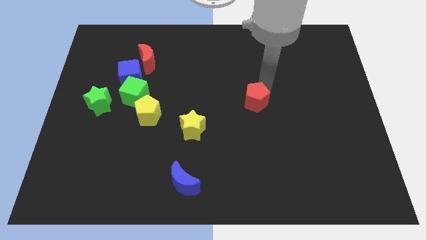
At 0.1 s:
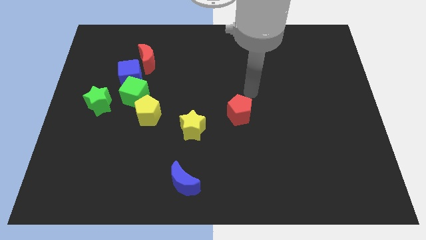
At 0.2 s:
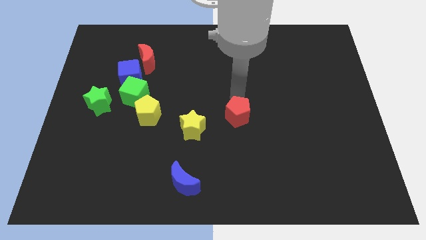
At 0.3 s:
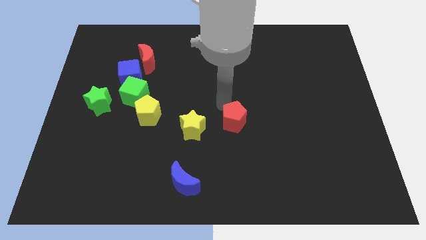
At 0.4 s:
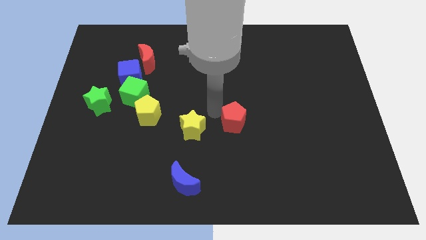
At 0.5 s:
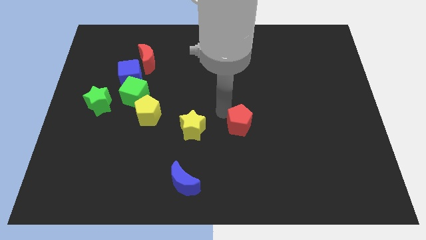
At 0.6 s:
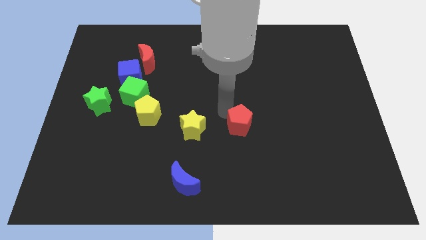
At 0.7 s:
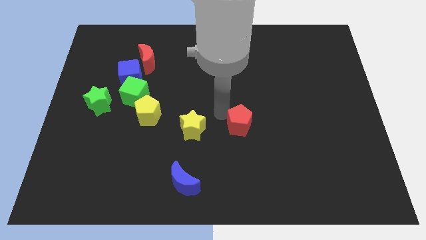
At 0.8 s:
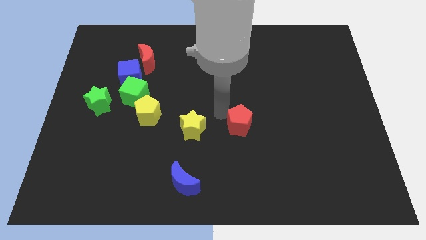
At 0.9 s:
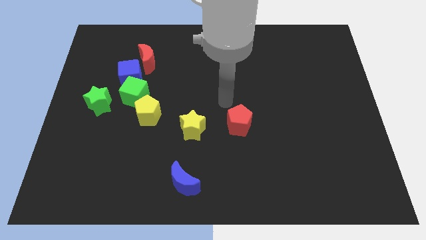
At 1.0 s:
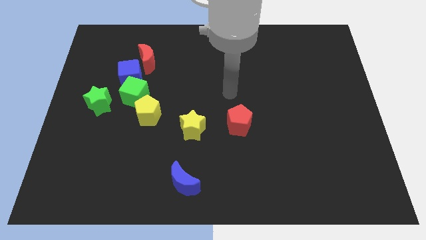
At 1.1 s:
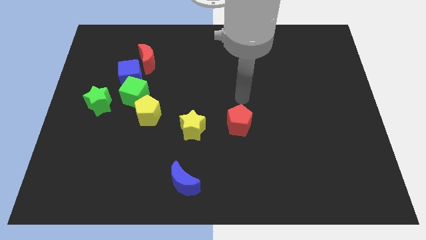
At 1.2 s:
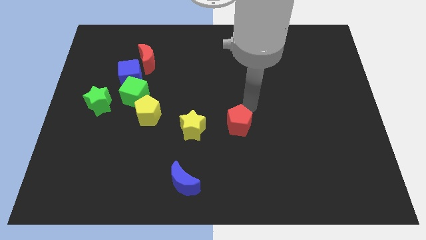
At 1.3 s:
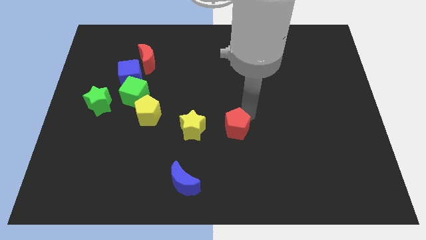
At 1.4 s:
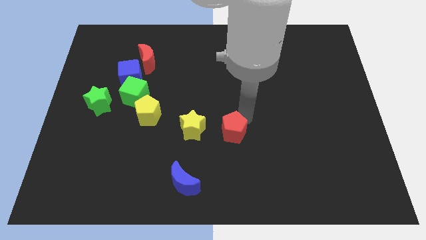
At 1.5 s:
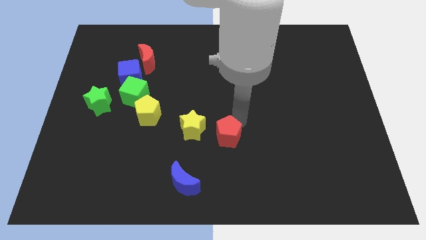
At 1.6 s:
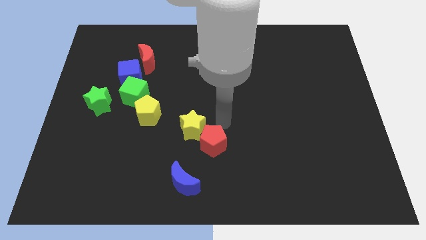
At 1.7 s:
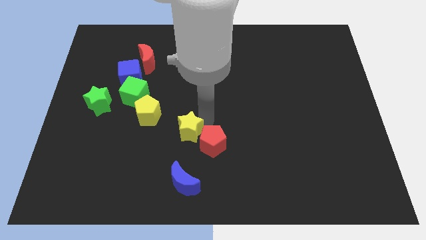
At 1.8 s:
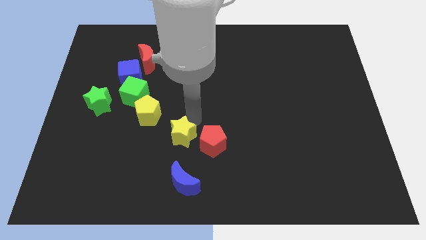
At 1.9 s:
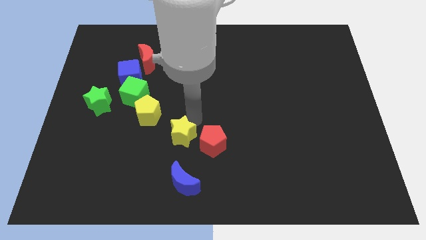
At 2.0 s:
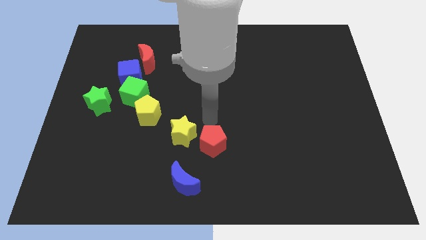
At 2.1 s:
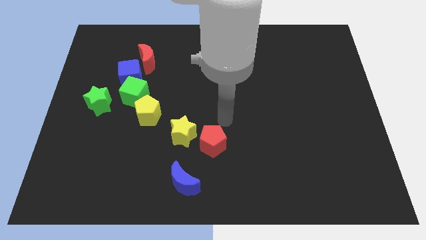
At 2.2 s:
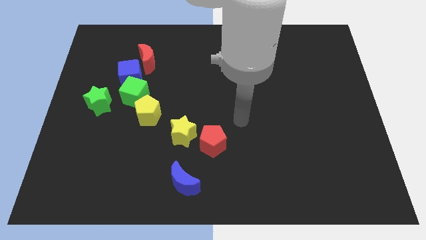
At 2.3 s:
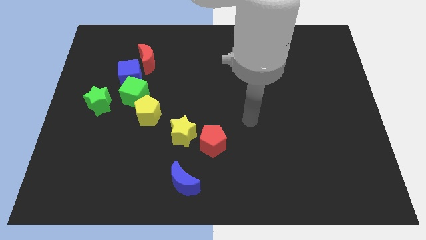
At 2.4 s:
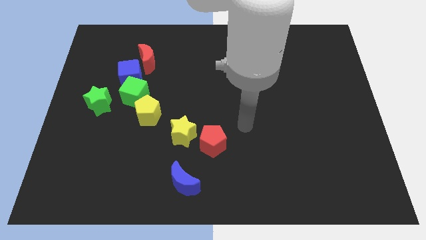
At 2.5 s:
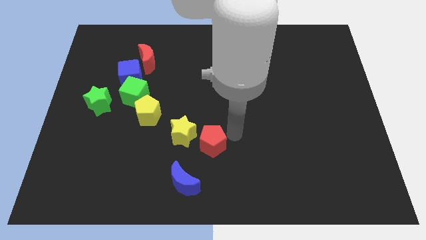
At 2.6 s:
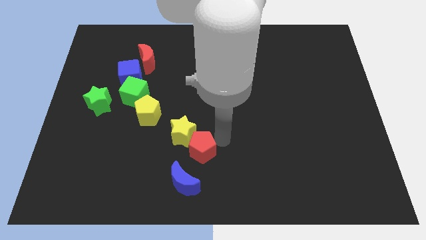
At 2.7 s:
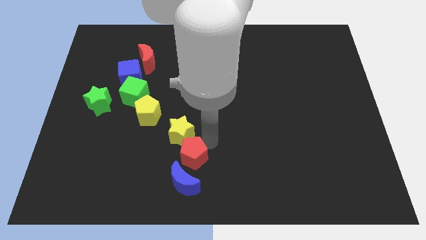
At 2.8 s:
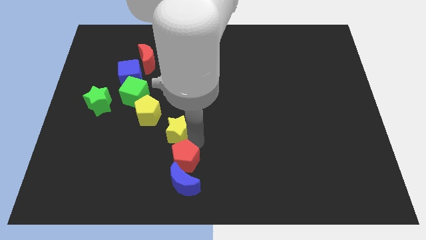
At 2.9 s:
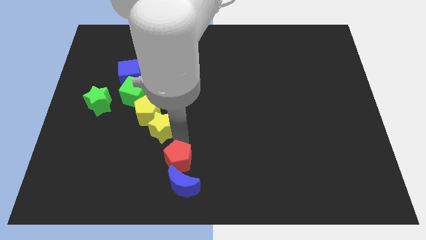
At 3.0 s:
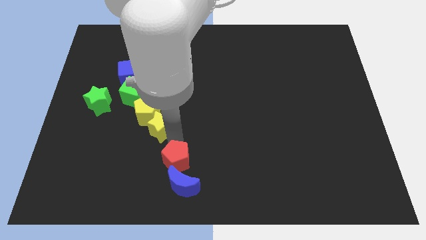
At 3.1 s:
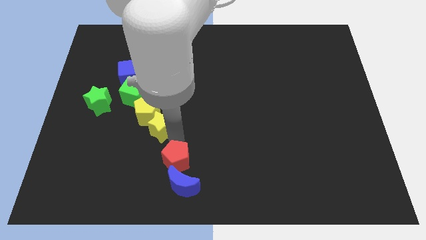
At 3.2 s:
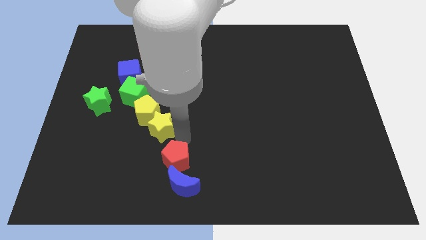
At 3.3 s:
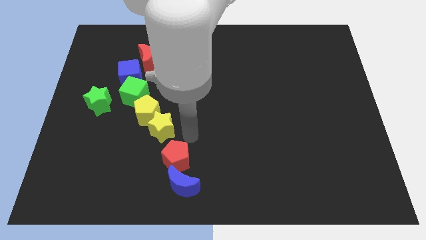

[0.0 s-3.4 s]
move yellow star into the yellow pentagon

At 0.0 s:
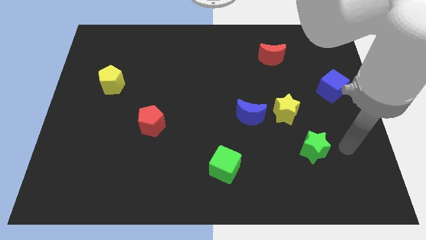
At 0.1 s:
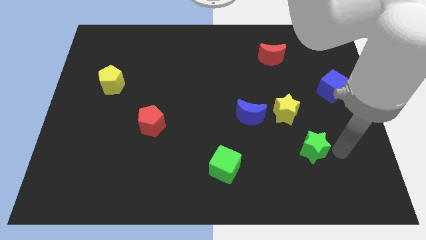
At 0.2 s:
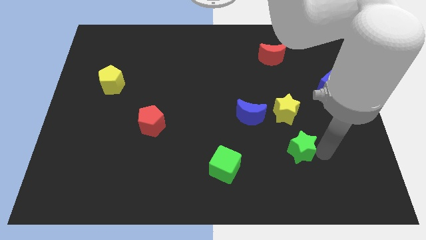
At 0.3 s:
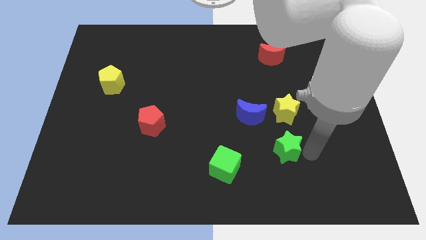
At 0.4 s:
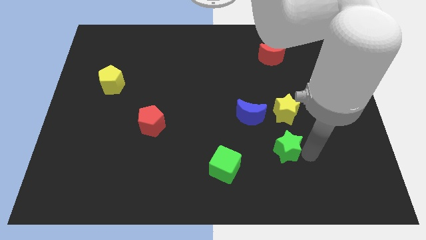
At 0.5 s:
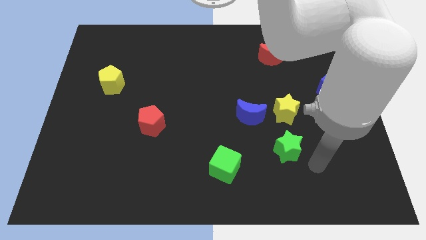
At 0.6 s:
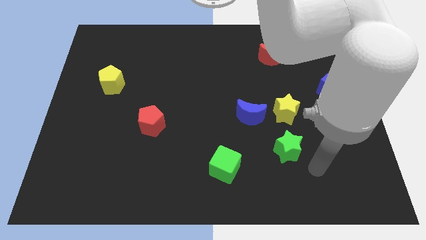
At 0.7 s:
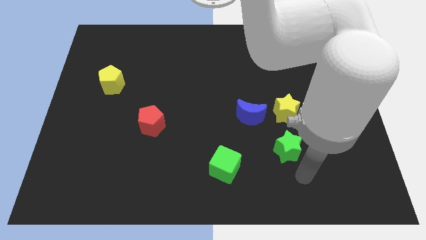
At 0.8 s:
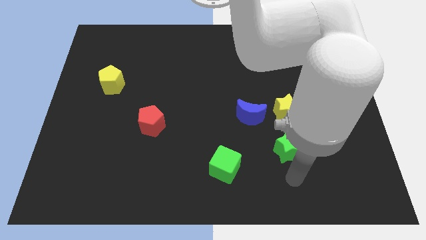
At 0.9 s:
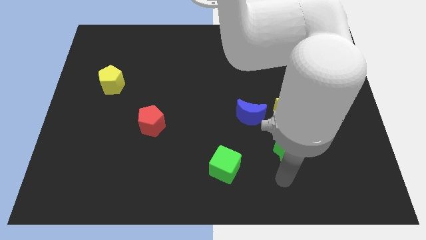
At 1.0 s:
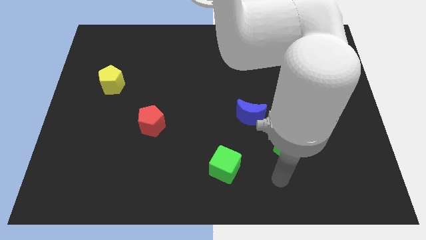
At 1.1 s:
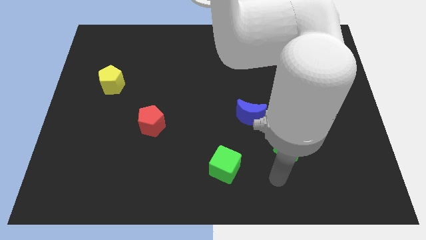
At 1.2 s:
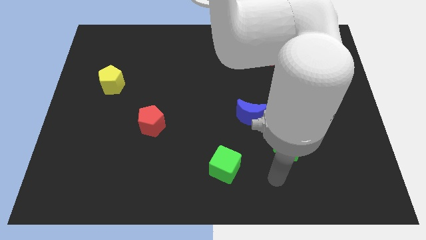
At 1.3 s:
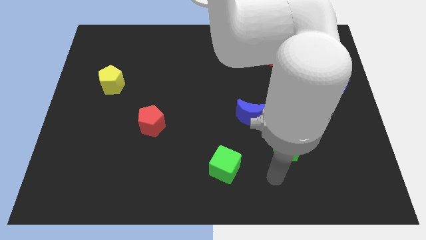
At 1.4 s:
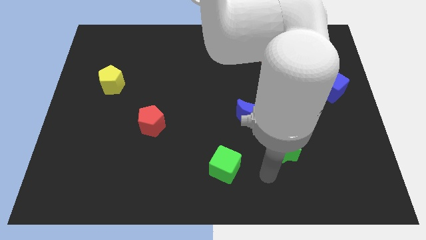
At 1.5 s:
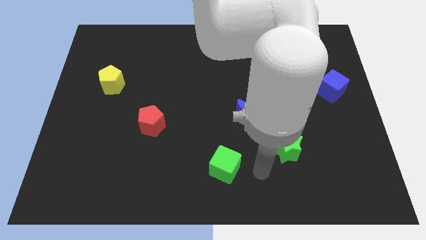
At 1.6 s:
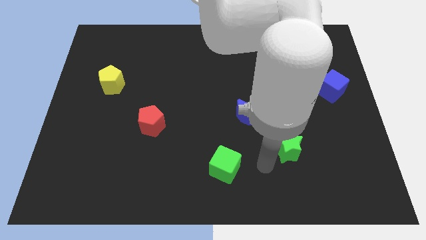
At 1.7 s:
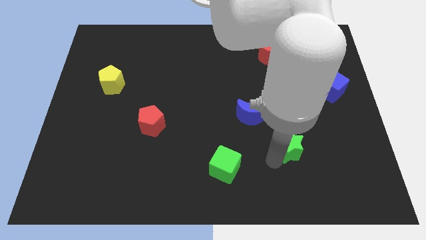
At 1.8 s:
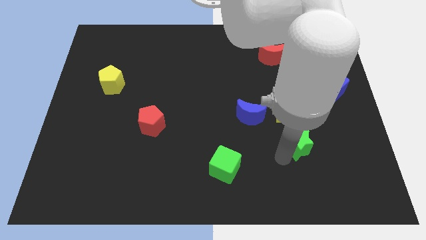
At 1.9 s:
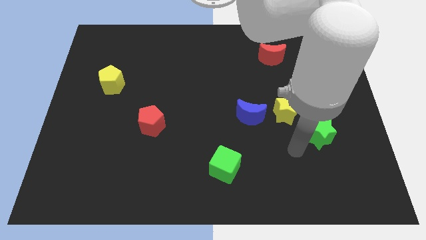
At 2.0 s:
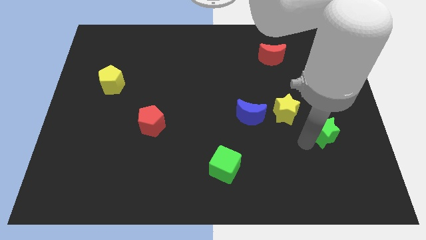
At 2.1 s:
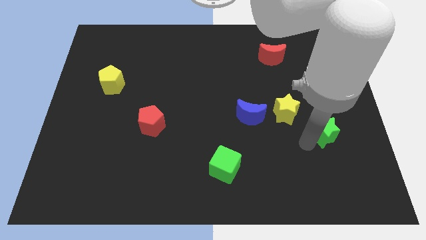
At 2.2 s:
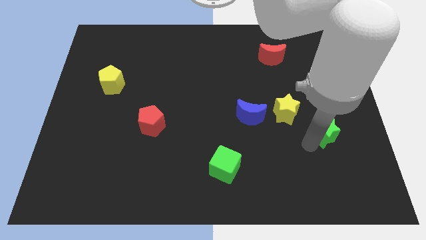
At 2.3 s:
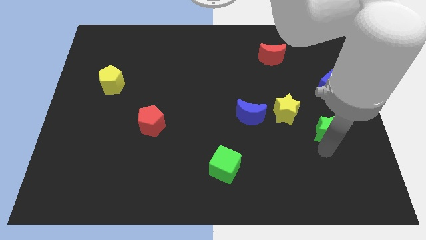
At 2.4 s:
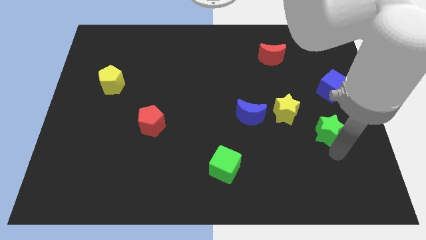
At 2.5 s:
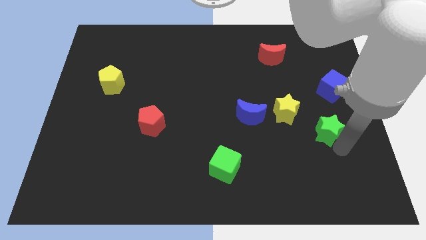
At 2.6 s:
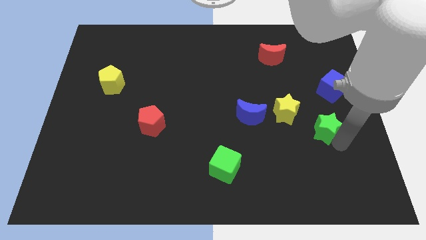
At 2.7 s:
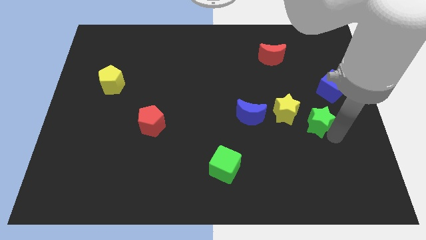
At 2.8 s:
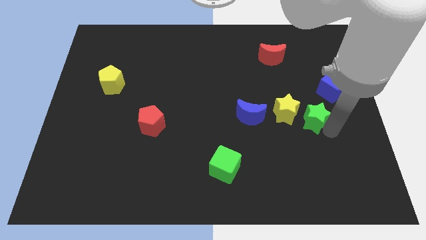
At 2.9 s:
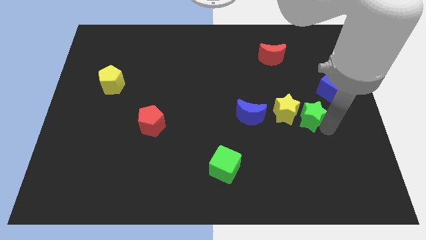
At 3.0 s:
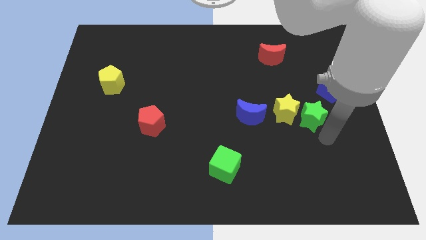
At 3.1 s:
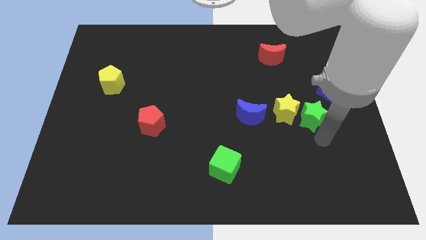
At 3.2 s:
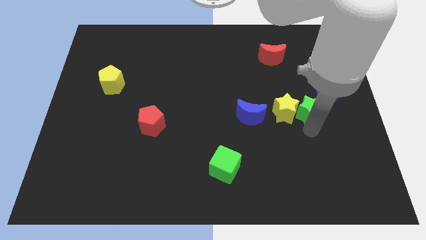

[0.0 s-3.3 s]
move the green star into the yellow star

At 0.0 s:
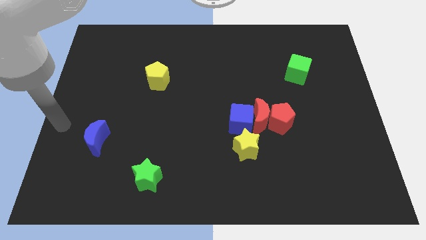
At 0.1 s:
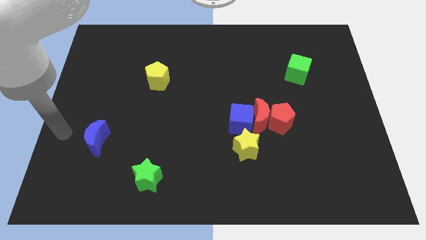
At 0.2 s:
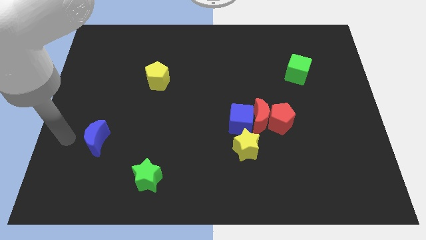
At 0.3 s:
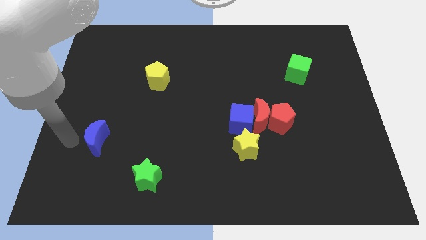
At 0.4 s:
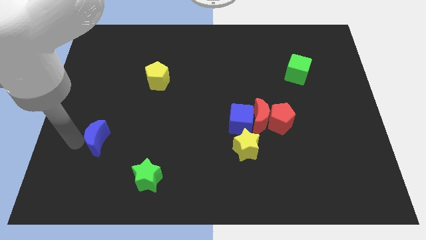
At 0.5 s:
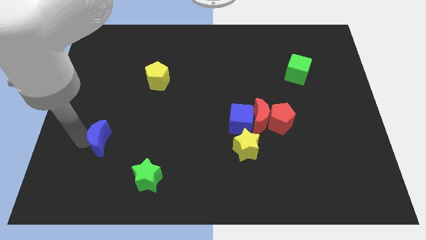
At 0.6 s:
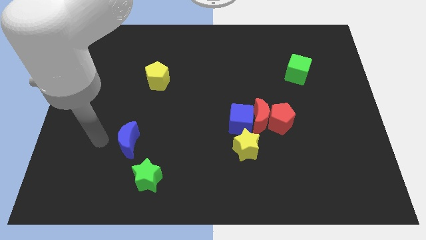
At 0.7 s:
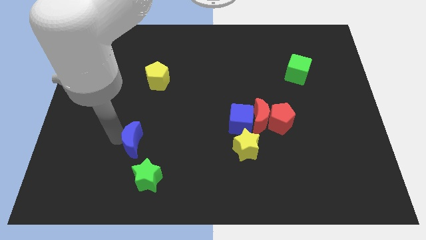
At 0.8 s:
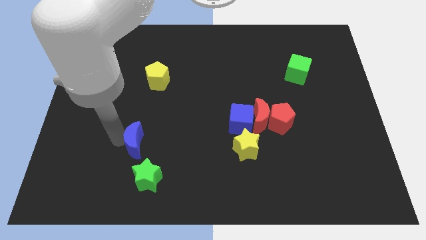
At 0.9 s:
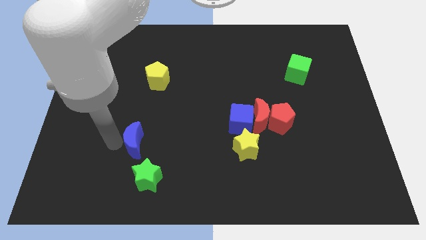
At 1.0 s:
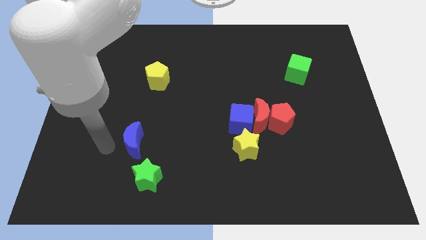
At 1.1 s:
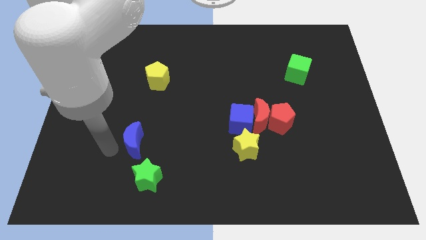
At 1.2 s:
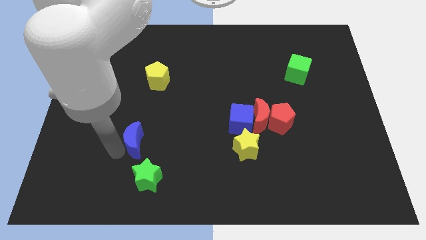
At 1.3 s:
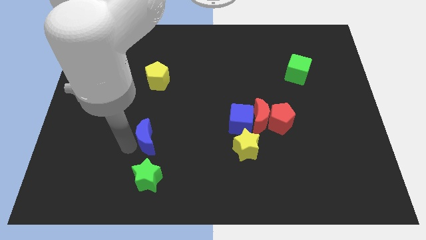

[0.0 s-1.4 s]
drag the blue moon vertically above the green star

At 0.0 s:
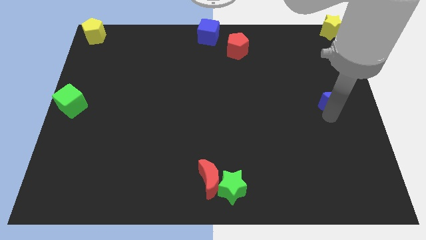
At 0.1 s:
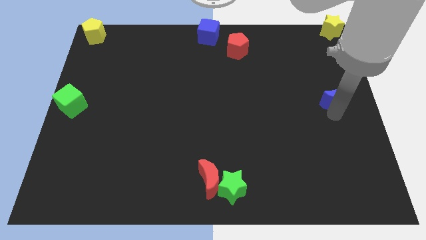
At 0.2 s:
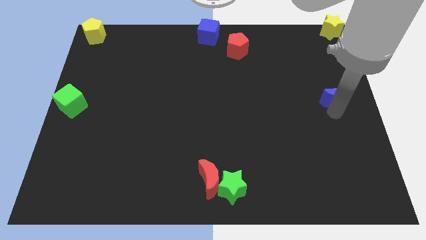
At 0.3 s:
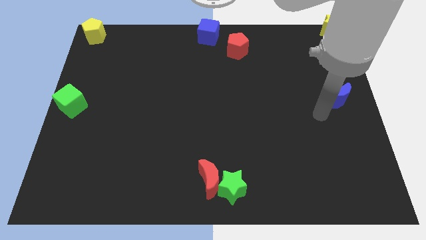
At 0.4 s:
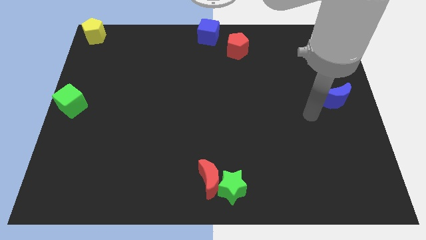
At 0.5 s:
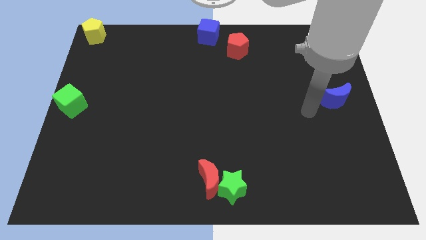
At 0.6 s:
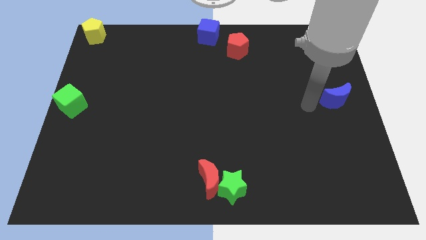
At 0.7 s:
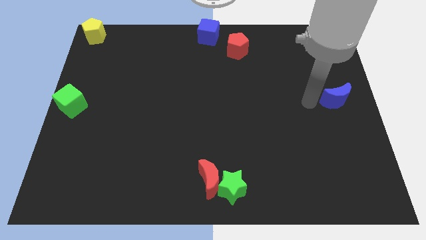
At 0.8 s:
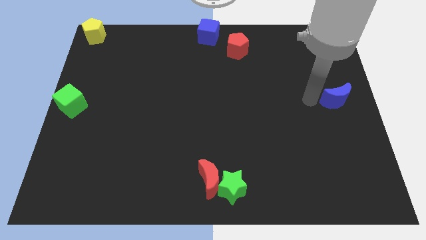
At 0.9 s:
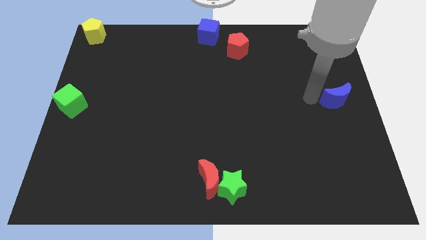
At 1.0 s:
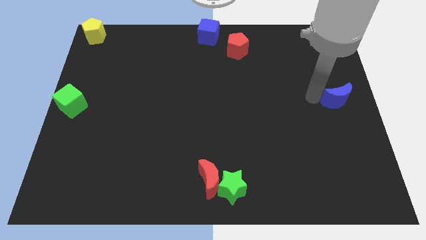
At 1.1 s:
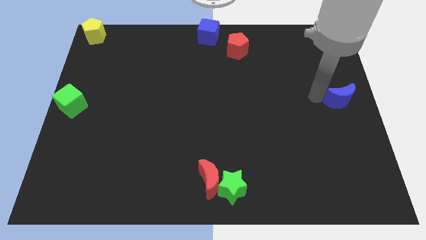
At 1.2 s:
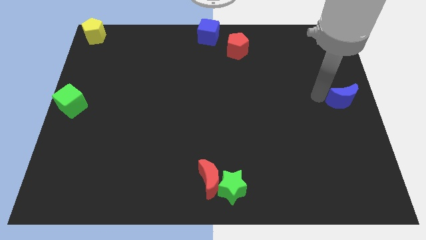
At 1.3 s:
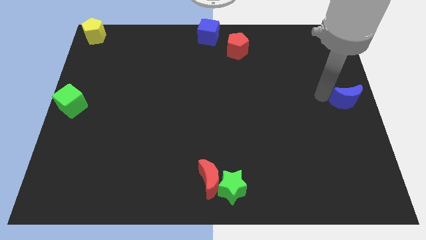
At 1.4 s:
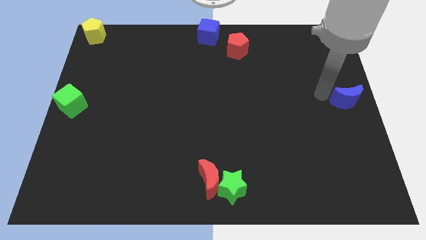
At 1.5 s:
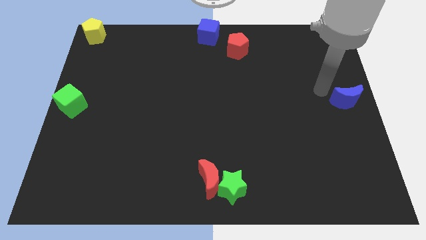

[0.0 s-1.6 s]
push the blue crescent to the right center of the board
